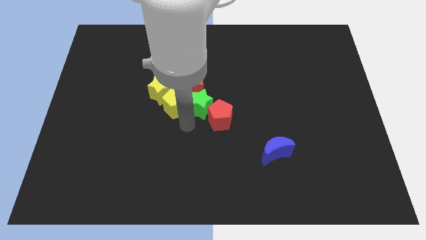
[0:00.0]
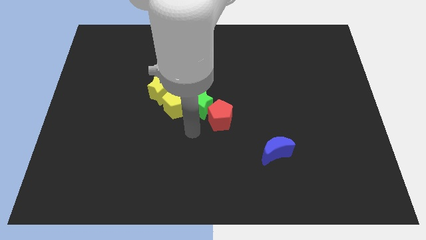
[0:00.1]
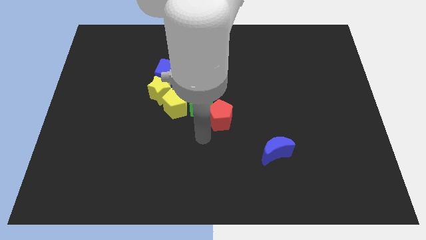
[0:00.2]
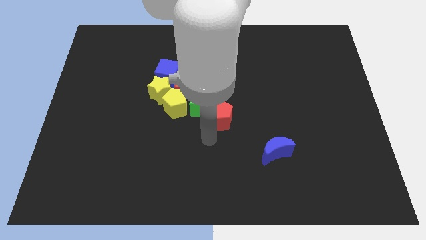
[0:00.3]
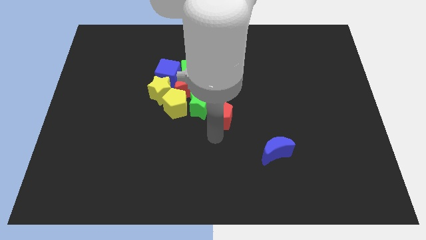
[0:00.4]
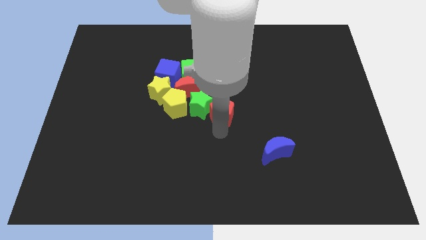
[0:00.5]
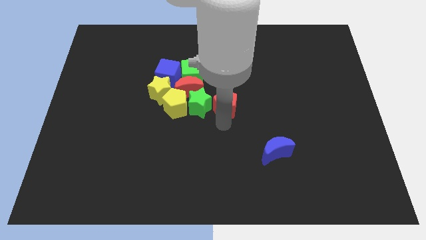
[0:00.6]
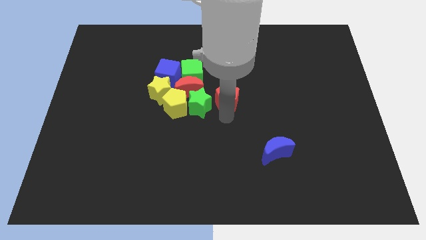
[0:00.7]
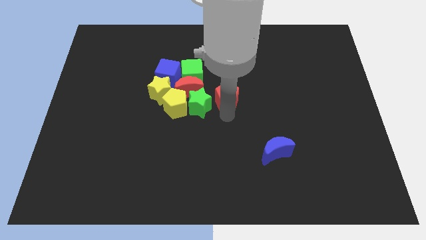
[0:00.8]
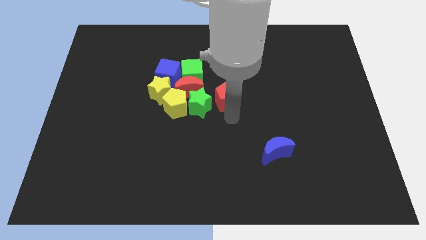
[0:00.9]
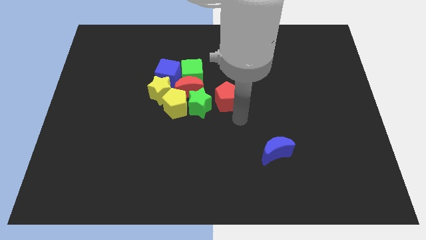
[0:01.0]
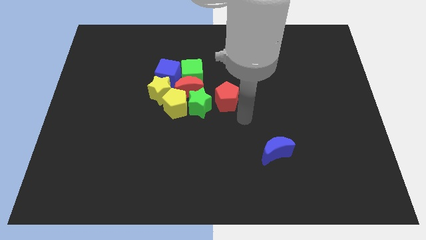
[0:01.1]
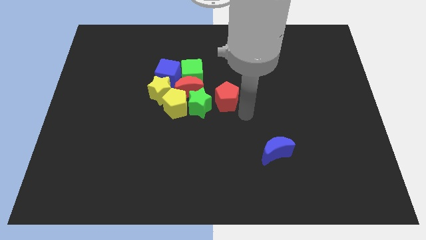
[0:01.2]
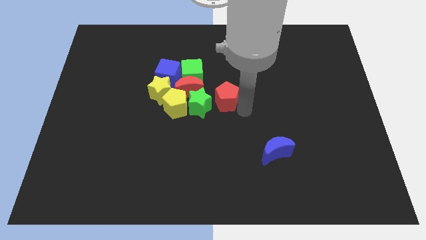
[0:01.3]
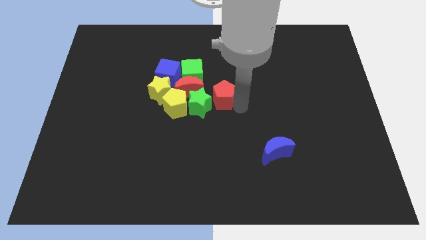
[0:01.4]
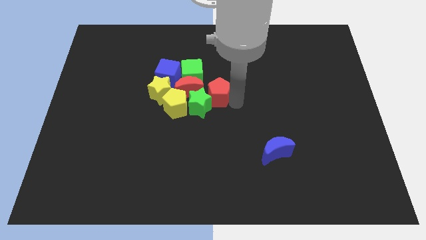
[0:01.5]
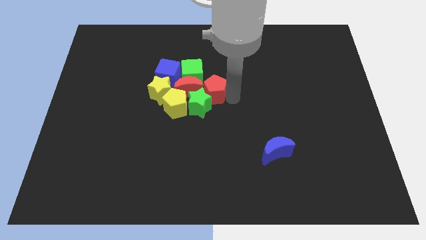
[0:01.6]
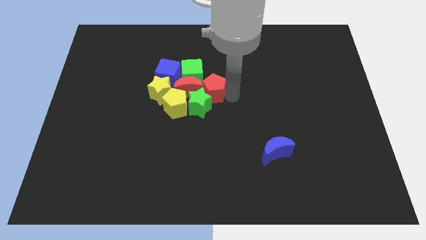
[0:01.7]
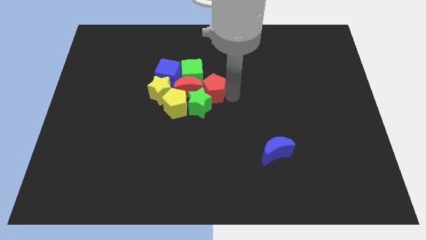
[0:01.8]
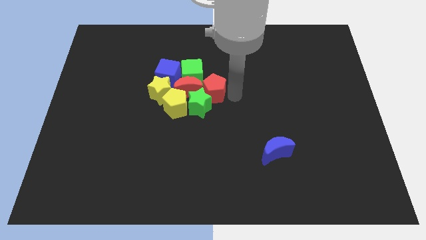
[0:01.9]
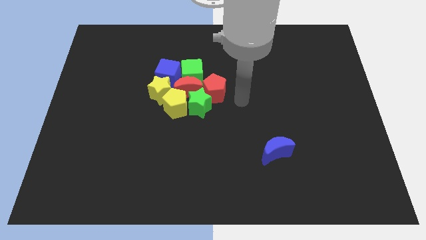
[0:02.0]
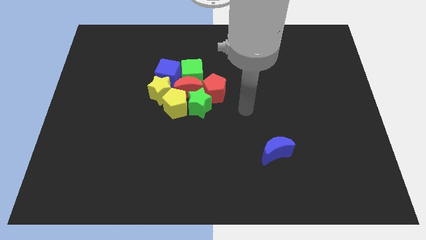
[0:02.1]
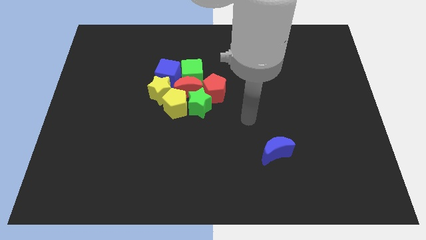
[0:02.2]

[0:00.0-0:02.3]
place the red pentagon to the right side of the red crescent

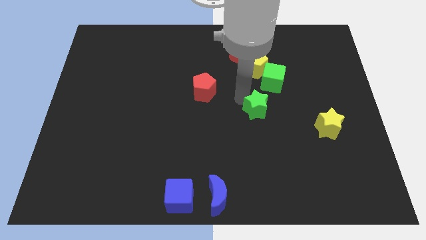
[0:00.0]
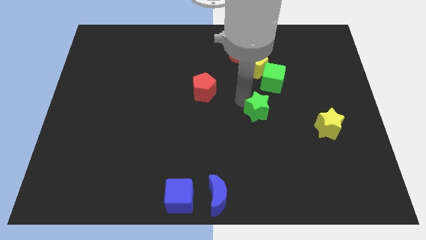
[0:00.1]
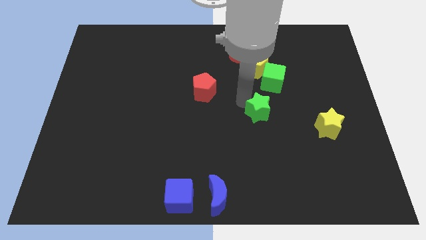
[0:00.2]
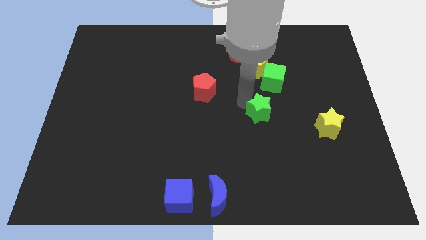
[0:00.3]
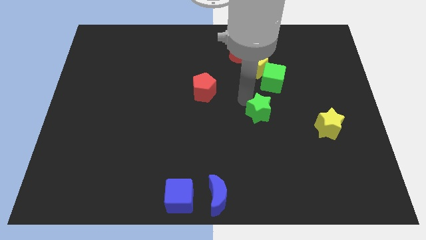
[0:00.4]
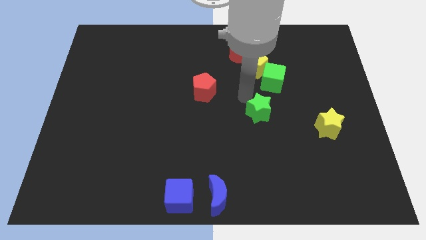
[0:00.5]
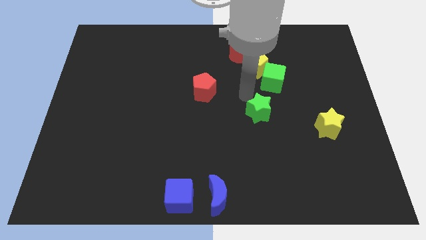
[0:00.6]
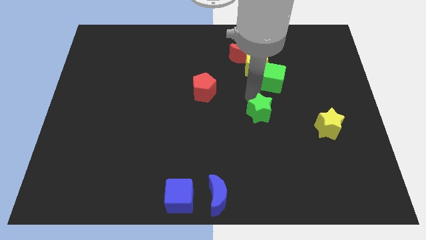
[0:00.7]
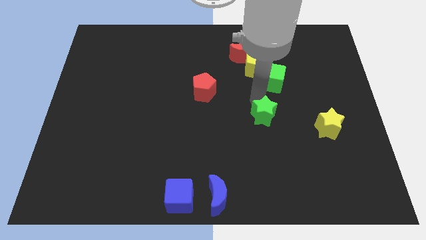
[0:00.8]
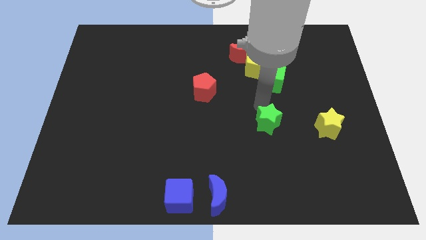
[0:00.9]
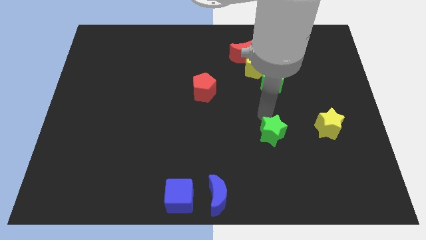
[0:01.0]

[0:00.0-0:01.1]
place green star left to yellow star

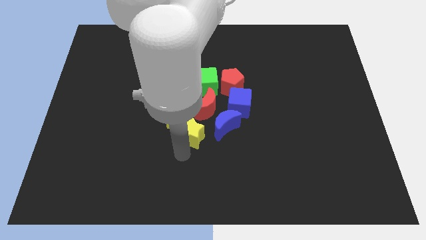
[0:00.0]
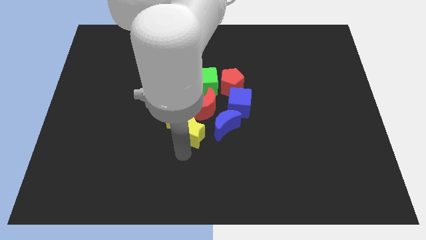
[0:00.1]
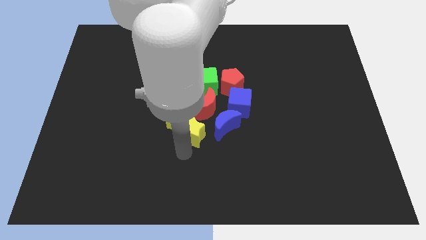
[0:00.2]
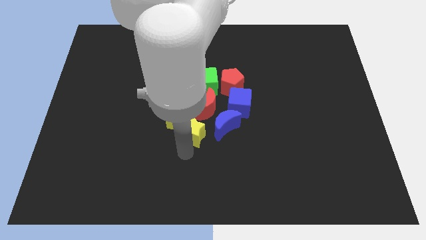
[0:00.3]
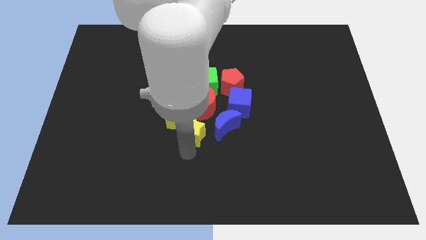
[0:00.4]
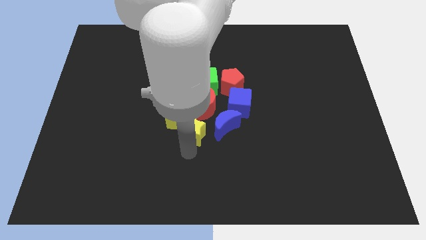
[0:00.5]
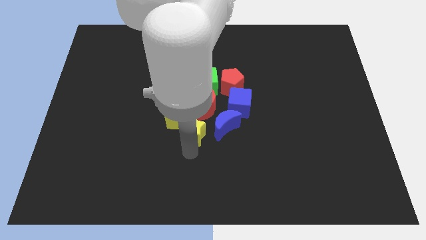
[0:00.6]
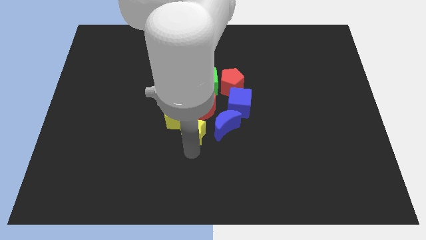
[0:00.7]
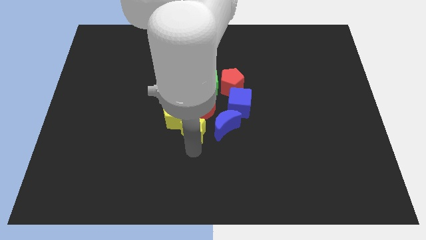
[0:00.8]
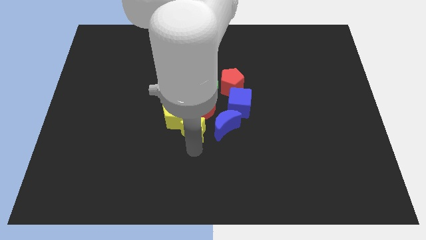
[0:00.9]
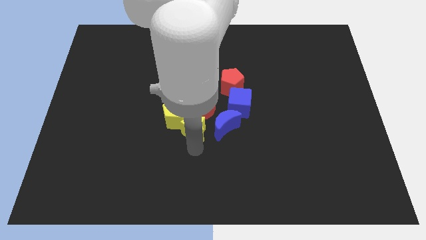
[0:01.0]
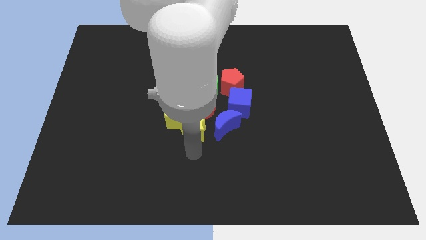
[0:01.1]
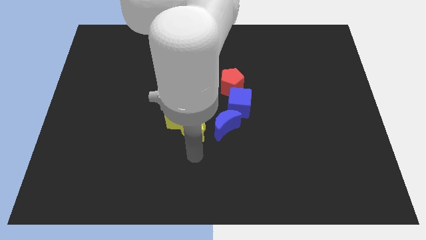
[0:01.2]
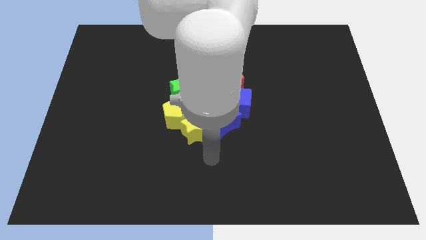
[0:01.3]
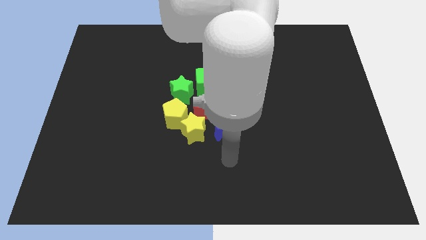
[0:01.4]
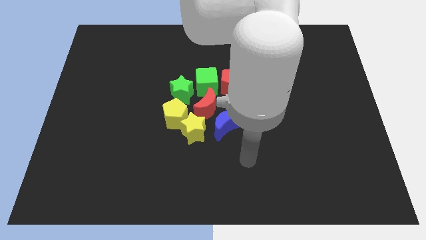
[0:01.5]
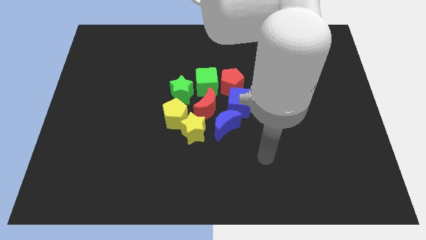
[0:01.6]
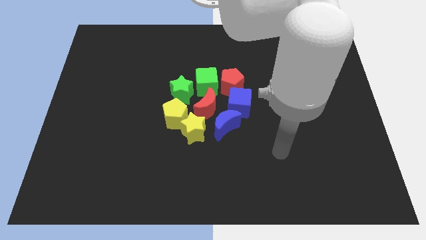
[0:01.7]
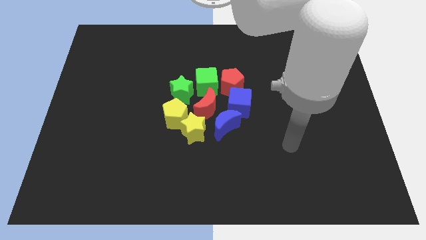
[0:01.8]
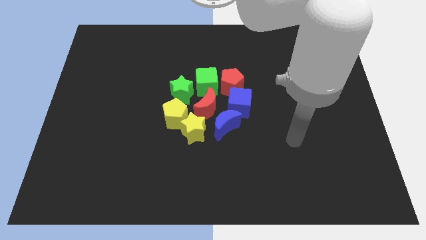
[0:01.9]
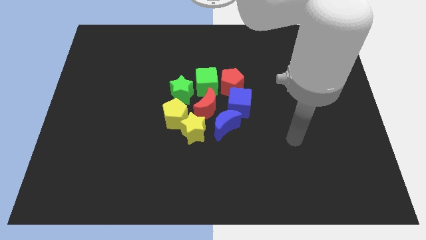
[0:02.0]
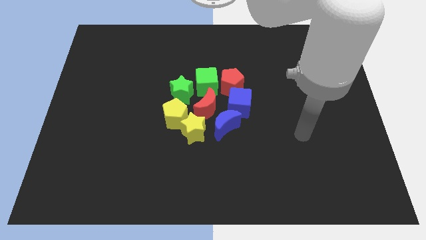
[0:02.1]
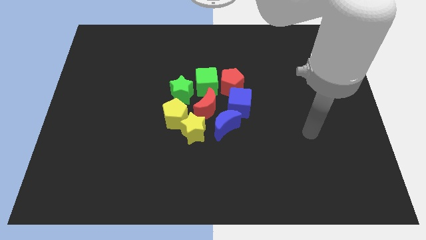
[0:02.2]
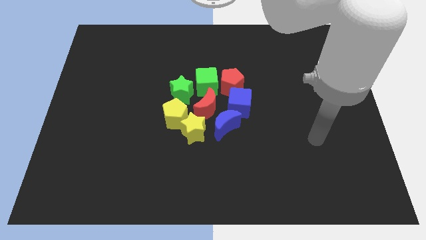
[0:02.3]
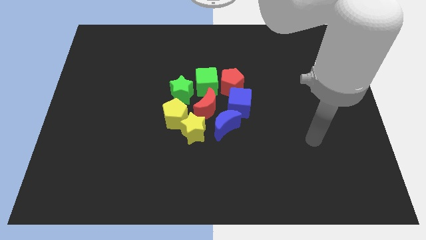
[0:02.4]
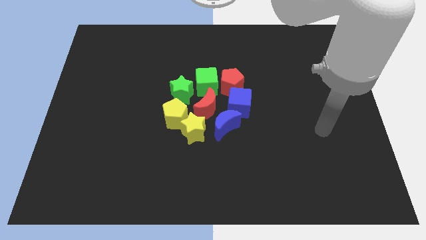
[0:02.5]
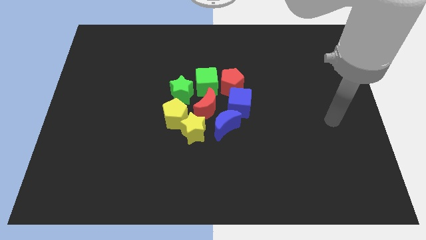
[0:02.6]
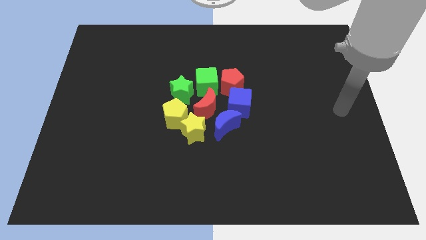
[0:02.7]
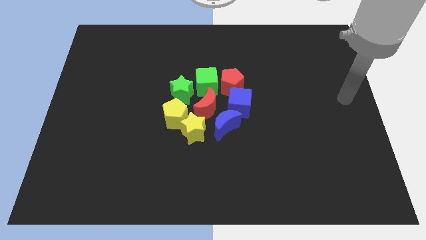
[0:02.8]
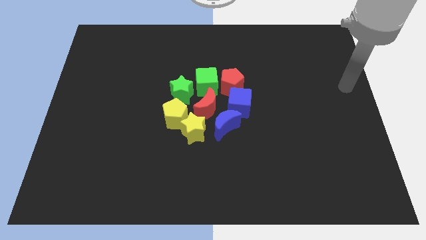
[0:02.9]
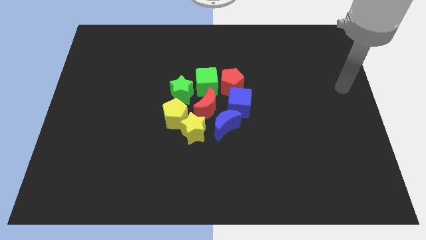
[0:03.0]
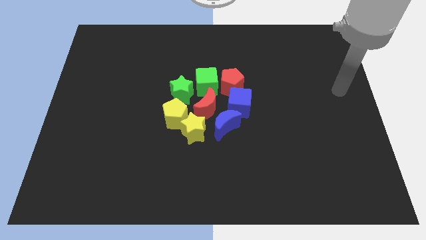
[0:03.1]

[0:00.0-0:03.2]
move your arm on the center right side of the board

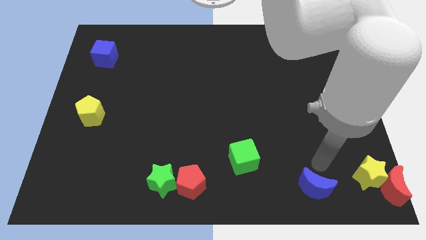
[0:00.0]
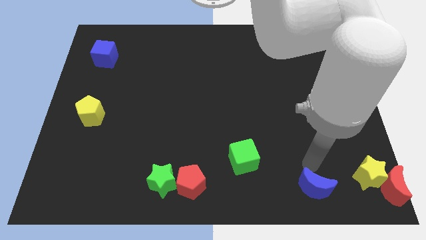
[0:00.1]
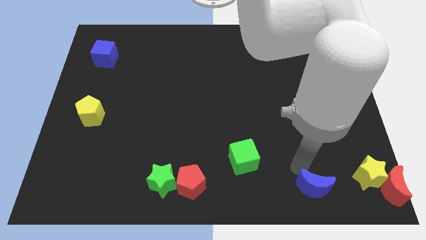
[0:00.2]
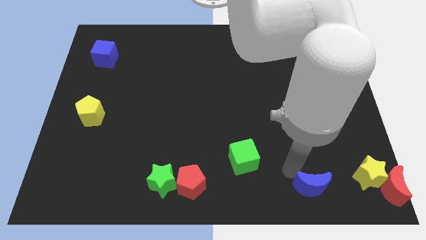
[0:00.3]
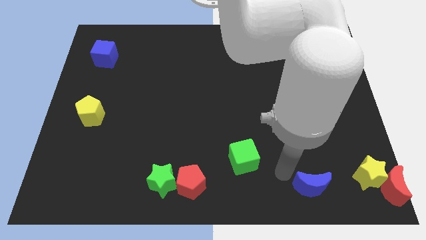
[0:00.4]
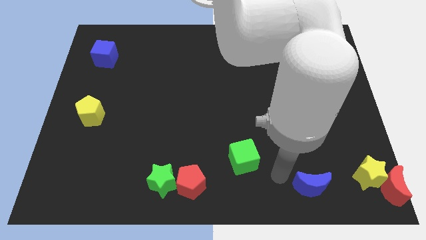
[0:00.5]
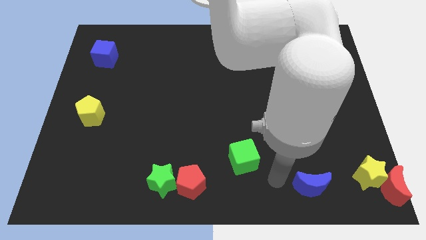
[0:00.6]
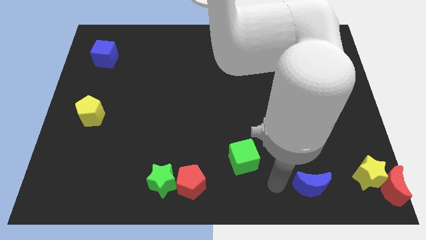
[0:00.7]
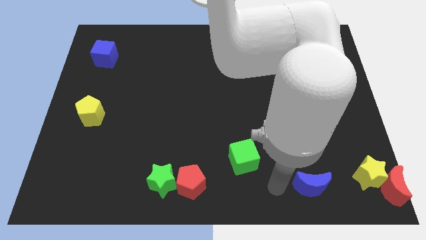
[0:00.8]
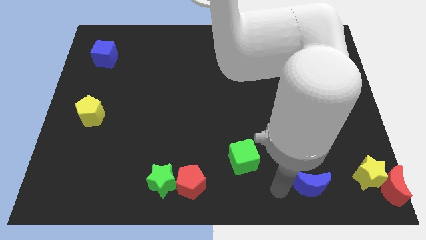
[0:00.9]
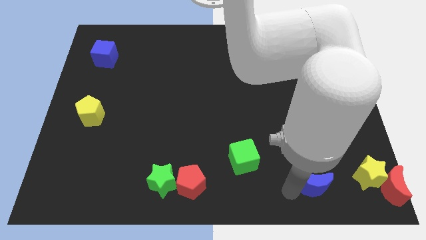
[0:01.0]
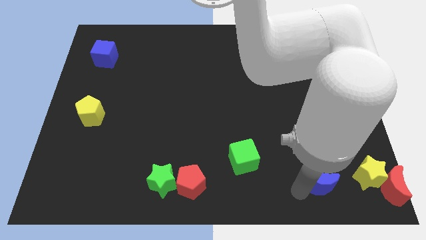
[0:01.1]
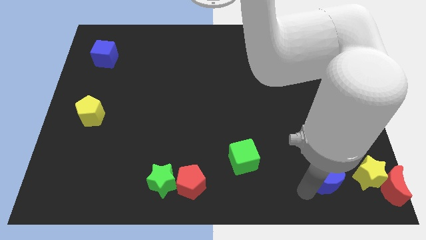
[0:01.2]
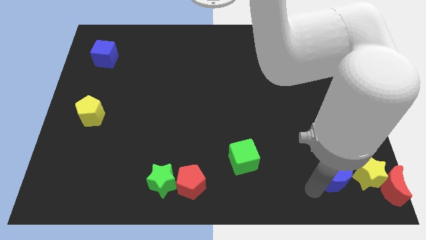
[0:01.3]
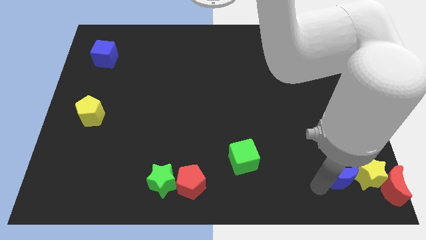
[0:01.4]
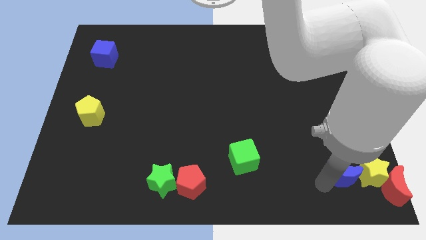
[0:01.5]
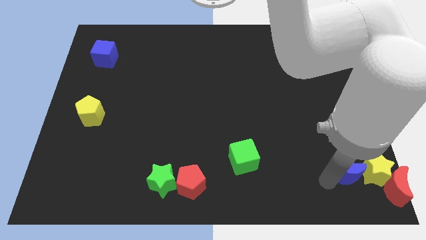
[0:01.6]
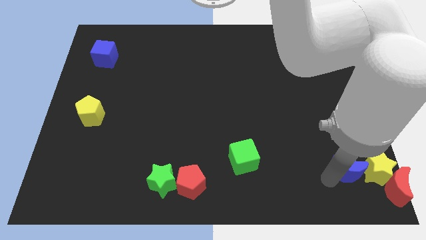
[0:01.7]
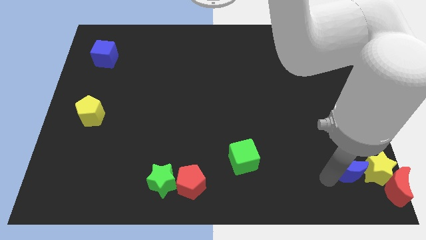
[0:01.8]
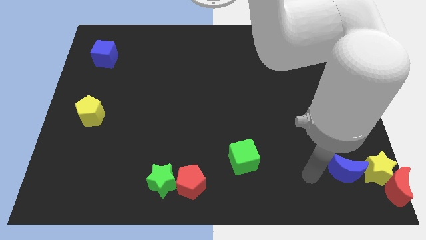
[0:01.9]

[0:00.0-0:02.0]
push the blue moon into the yellow star to the left

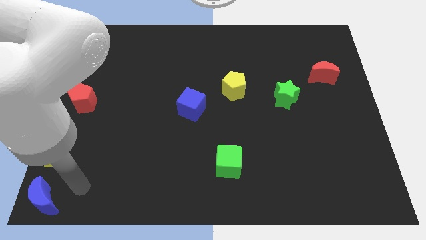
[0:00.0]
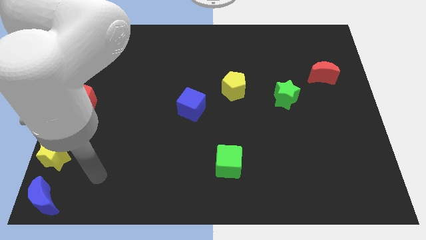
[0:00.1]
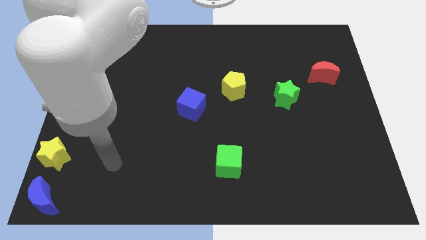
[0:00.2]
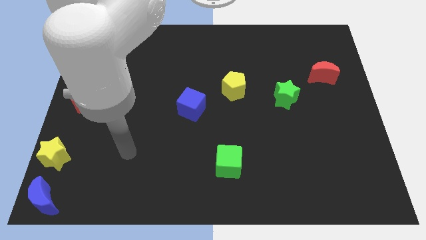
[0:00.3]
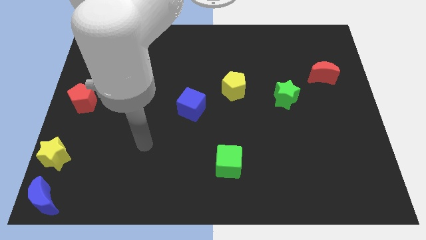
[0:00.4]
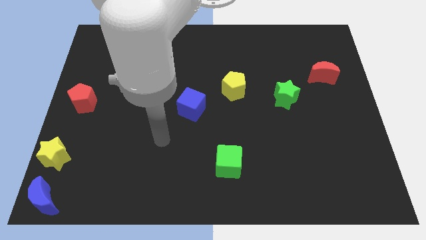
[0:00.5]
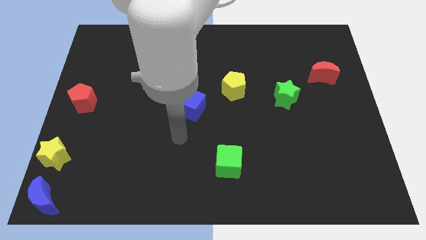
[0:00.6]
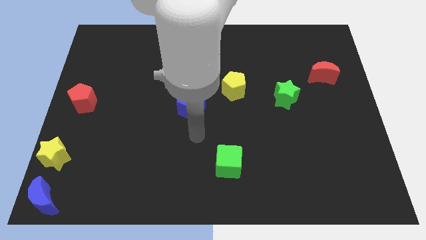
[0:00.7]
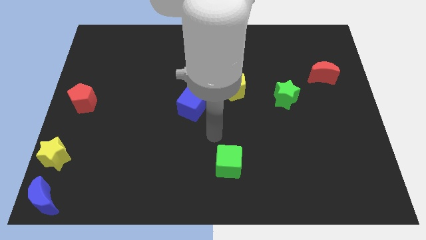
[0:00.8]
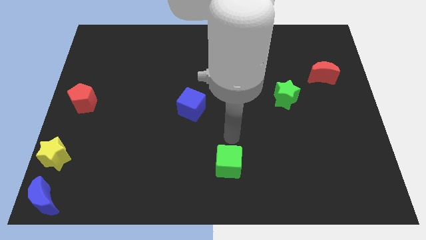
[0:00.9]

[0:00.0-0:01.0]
point your arm at the top of green cube
